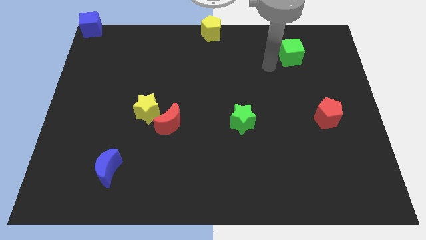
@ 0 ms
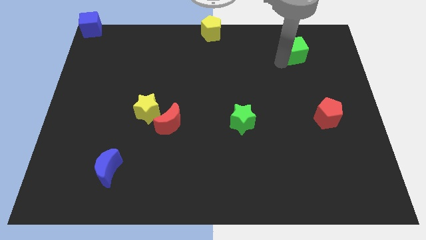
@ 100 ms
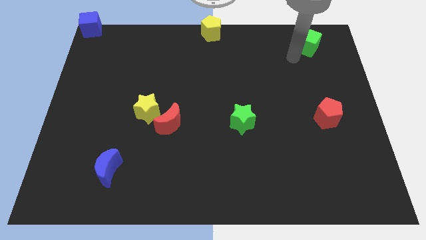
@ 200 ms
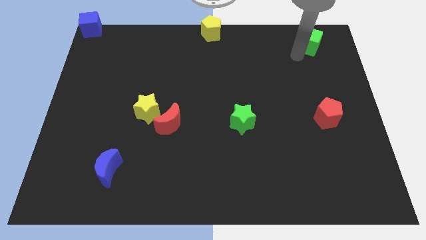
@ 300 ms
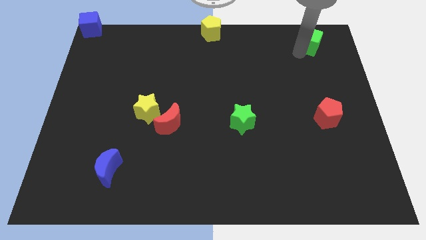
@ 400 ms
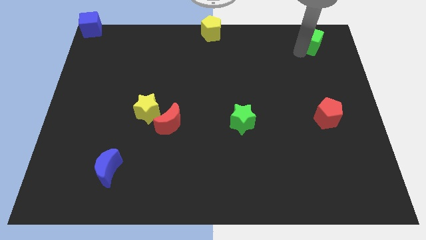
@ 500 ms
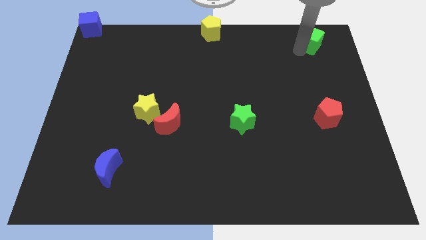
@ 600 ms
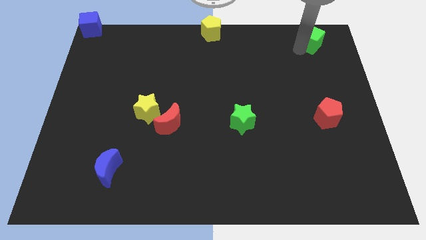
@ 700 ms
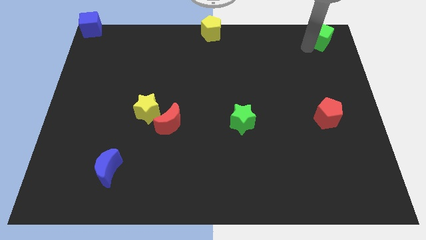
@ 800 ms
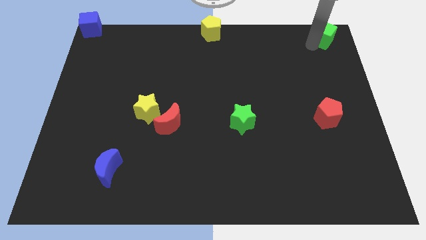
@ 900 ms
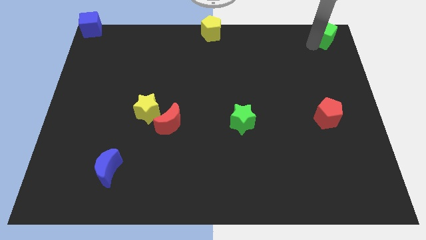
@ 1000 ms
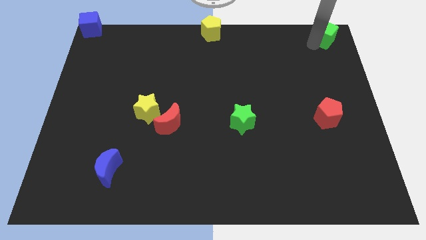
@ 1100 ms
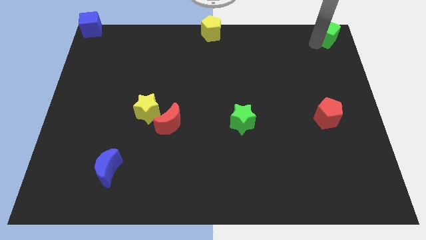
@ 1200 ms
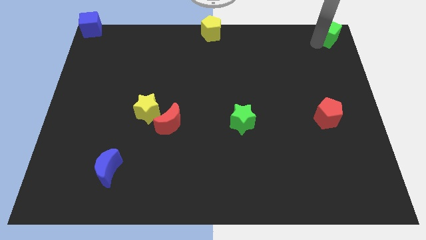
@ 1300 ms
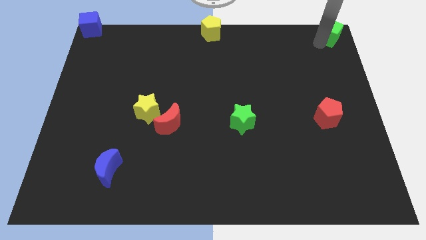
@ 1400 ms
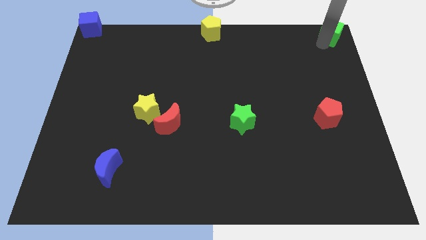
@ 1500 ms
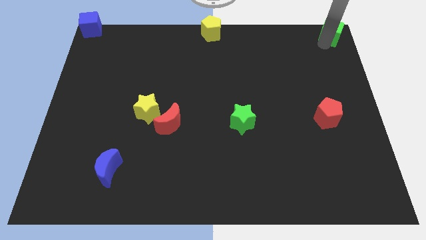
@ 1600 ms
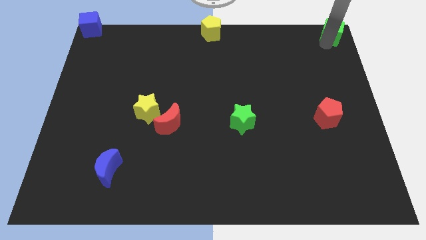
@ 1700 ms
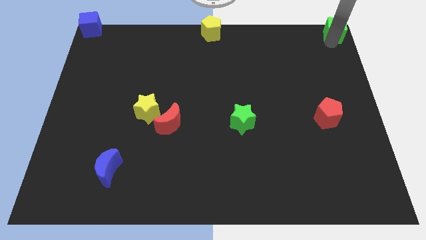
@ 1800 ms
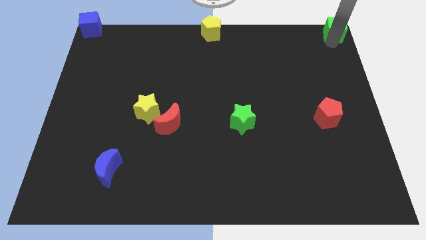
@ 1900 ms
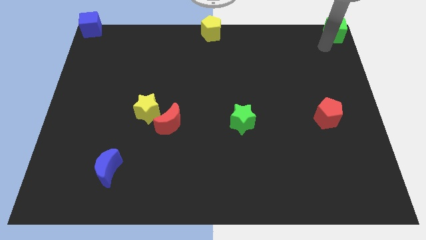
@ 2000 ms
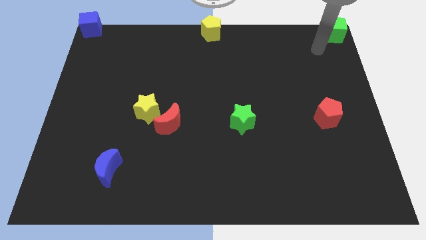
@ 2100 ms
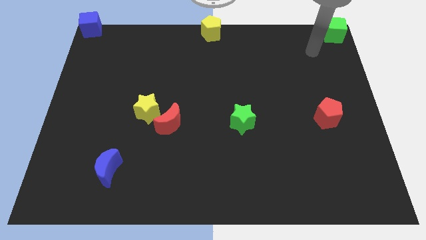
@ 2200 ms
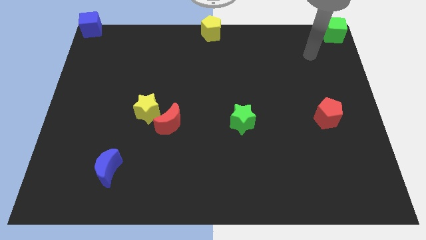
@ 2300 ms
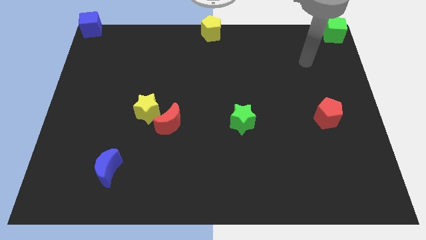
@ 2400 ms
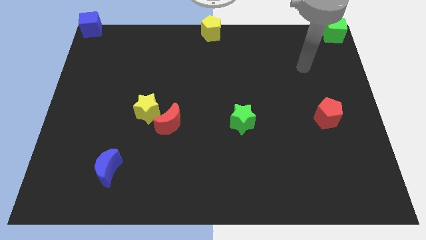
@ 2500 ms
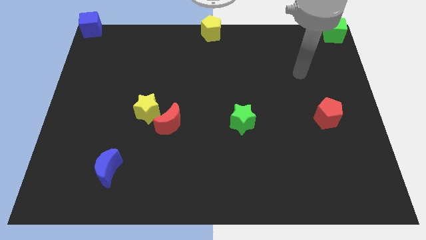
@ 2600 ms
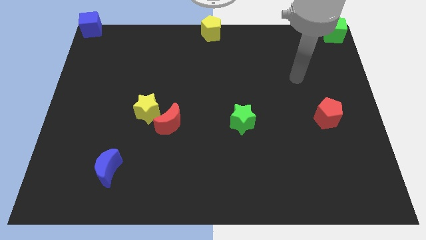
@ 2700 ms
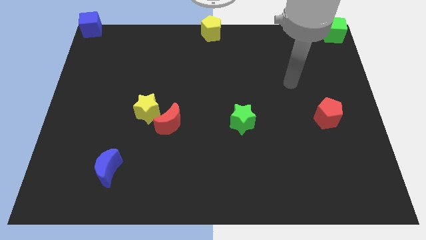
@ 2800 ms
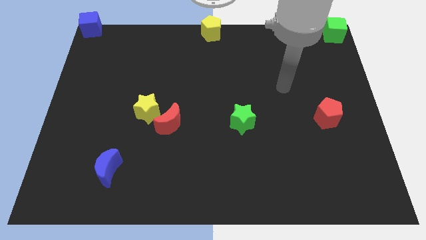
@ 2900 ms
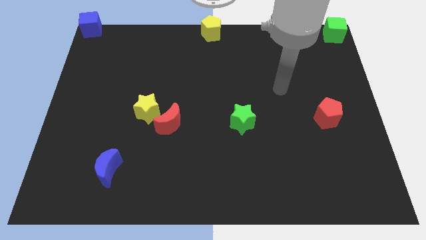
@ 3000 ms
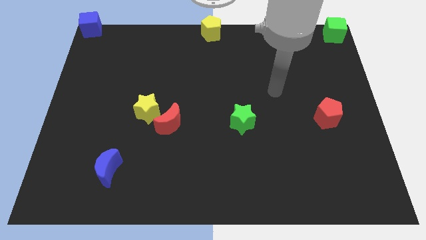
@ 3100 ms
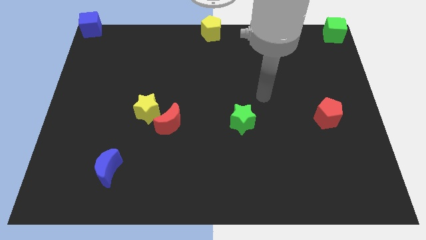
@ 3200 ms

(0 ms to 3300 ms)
put the green cube at the top right corner of the board

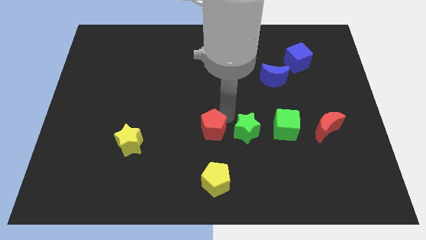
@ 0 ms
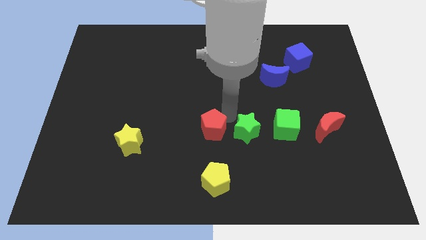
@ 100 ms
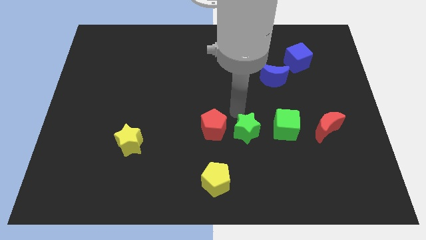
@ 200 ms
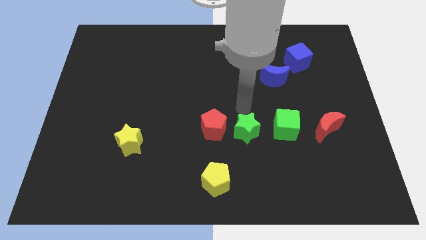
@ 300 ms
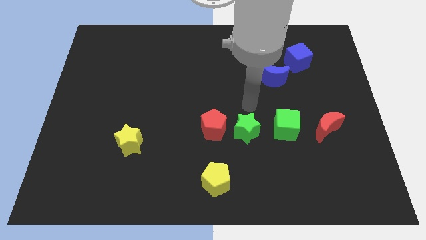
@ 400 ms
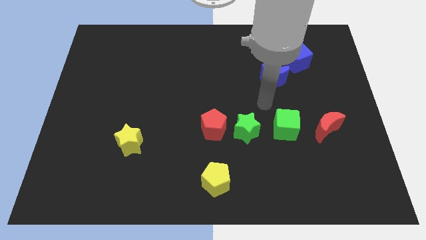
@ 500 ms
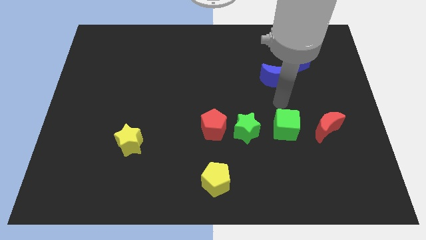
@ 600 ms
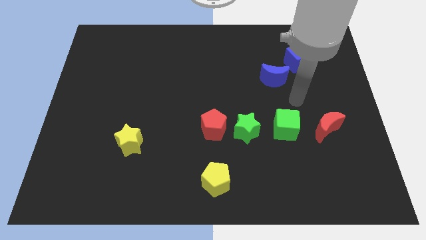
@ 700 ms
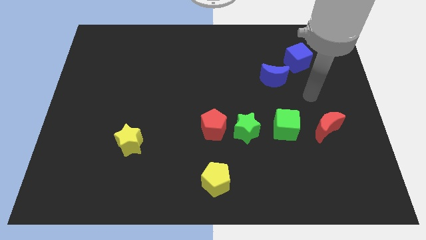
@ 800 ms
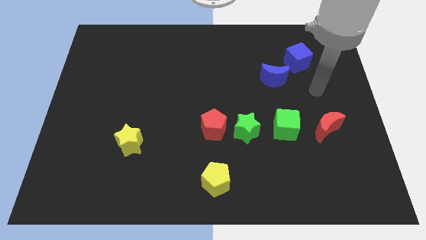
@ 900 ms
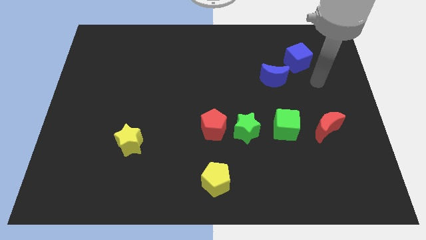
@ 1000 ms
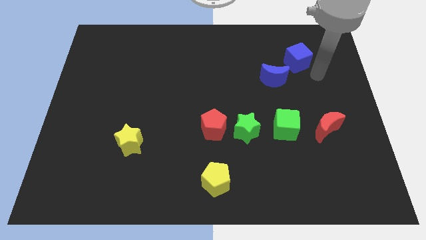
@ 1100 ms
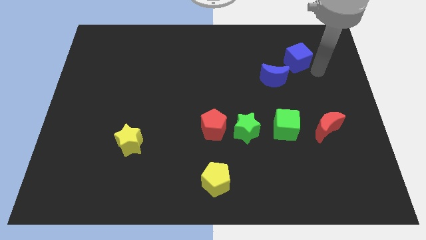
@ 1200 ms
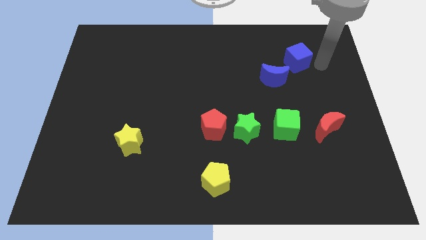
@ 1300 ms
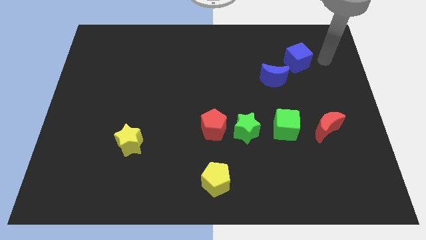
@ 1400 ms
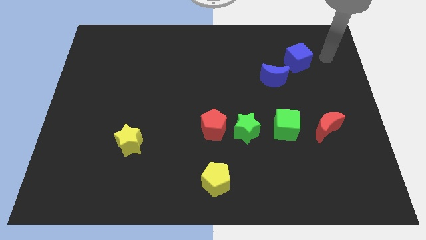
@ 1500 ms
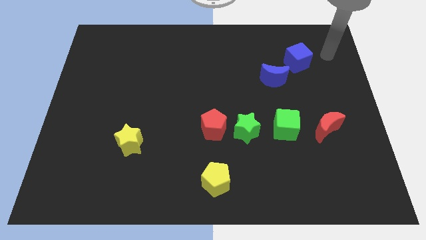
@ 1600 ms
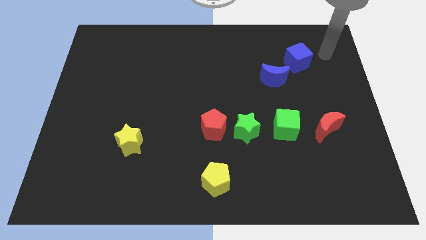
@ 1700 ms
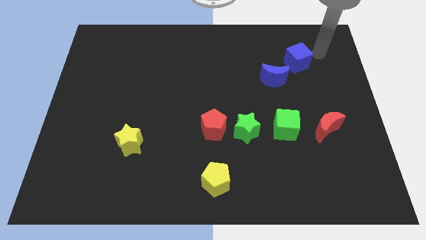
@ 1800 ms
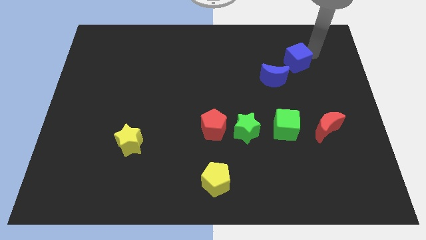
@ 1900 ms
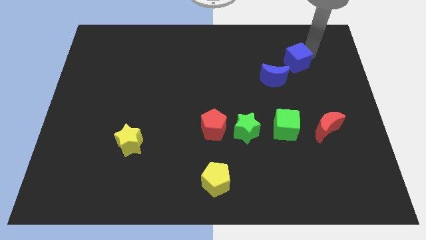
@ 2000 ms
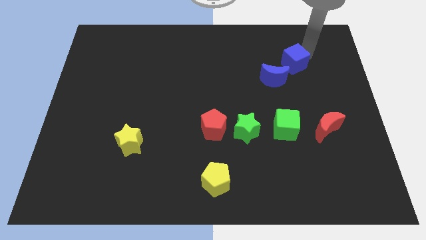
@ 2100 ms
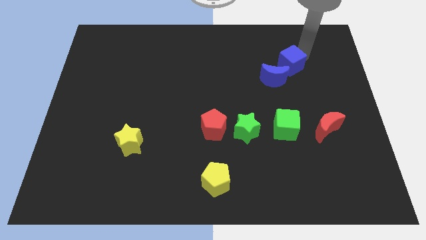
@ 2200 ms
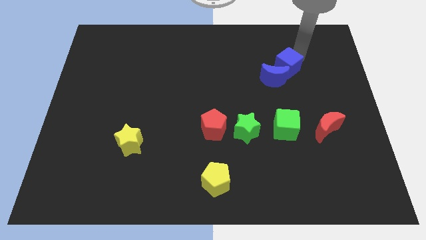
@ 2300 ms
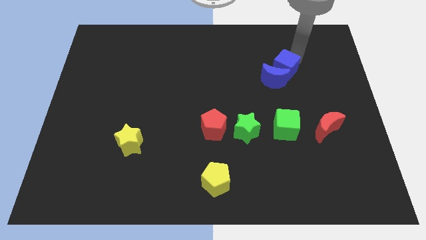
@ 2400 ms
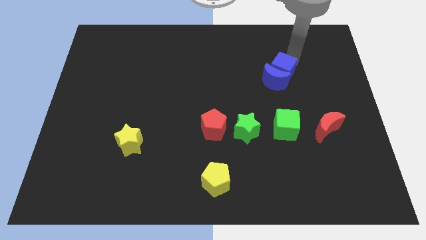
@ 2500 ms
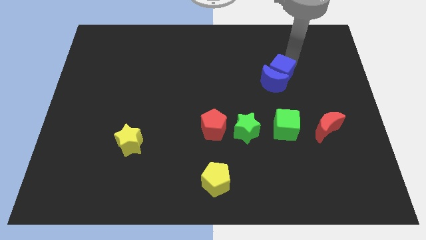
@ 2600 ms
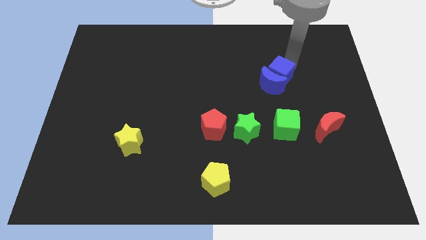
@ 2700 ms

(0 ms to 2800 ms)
move the blue cube into the blue crescent

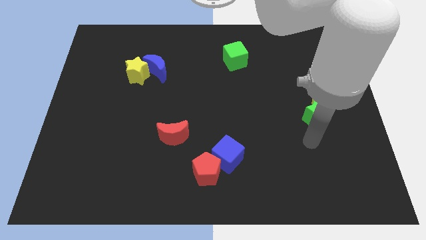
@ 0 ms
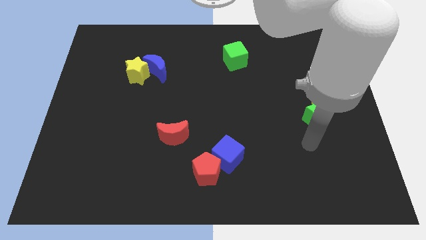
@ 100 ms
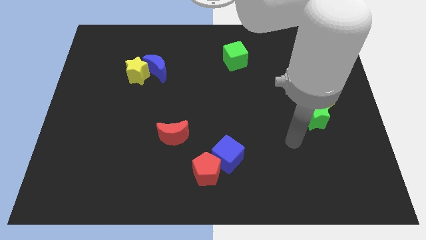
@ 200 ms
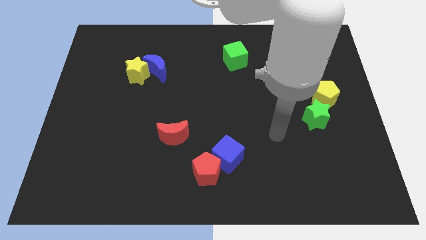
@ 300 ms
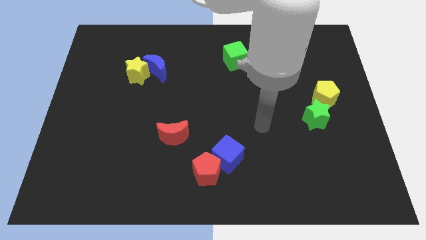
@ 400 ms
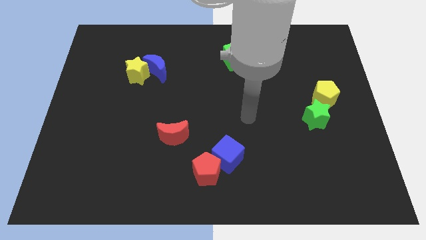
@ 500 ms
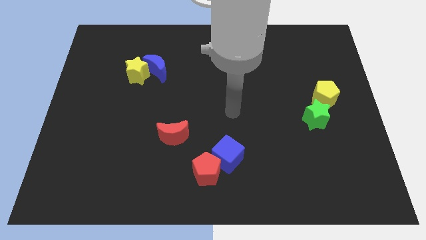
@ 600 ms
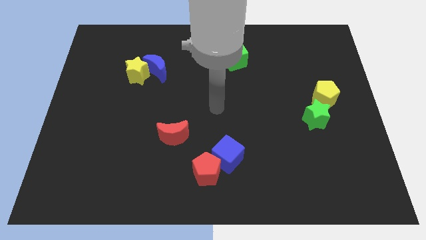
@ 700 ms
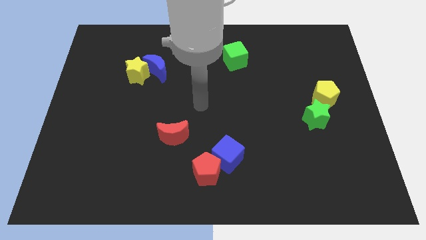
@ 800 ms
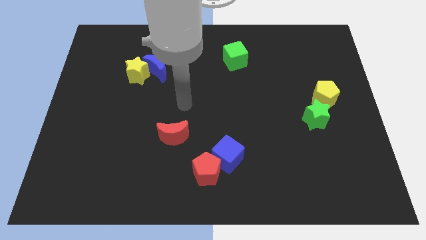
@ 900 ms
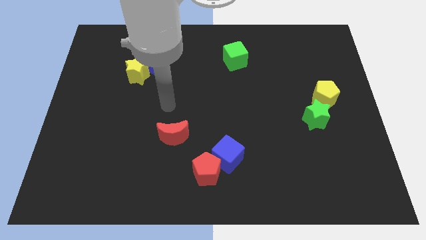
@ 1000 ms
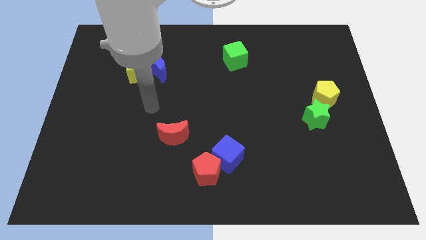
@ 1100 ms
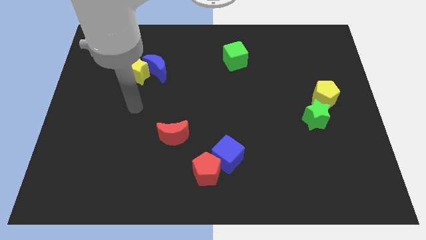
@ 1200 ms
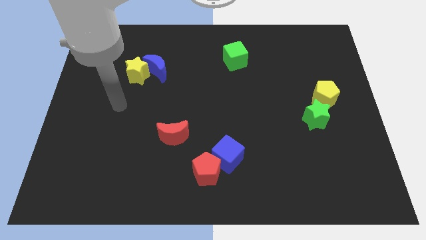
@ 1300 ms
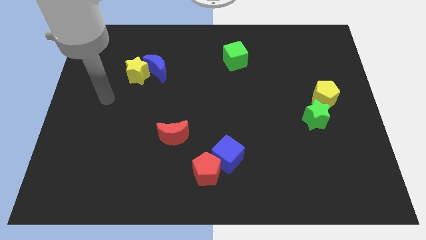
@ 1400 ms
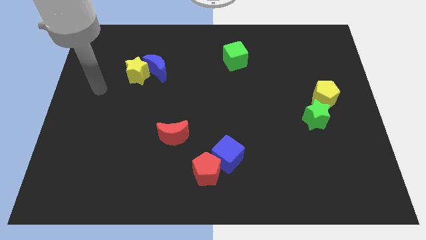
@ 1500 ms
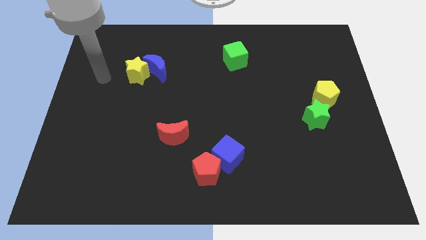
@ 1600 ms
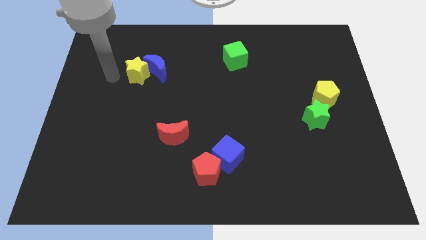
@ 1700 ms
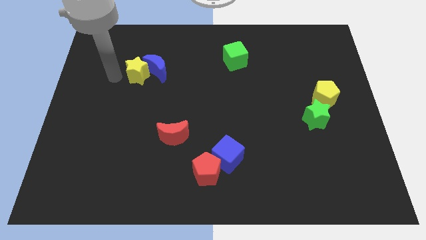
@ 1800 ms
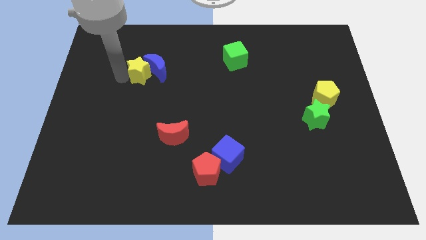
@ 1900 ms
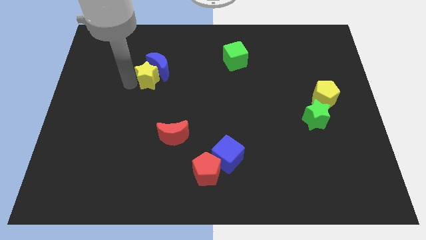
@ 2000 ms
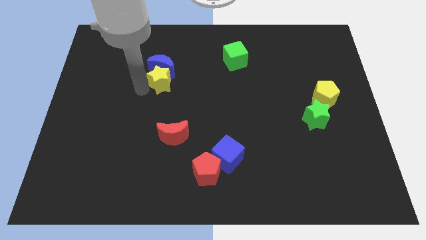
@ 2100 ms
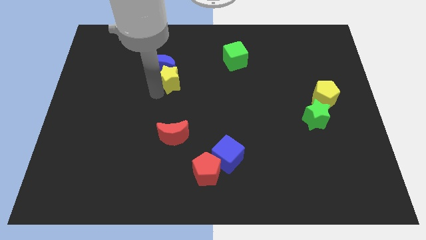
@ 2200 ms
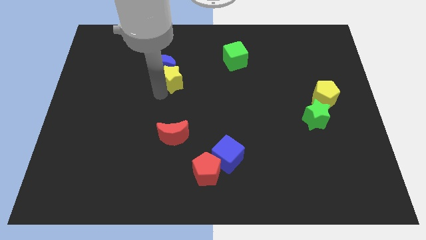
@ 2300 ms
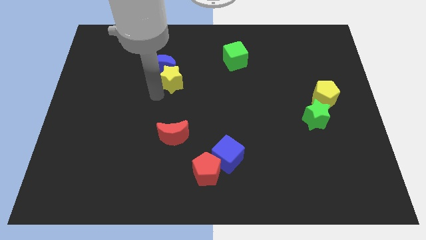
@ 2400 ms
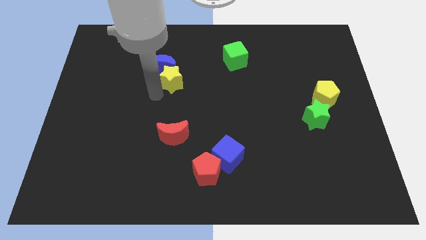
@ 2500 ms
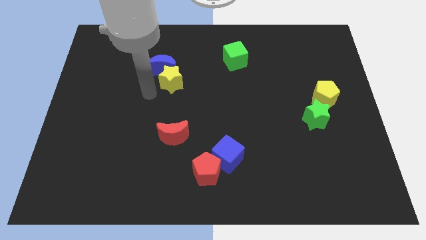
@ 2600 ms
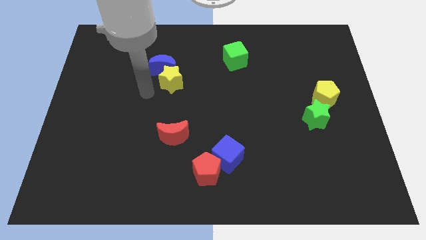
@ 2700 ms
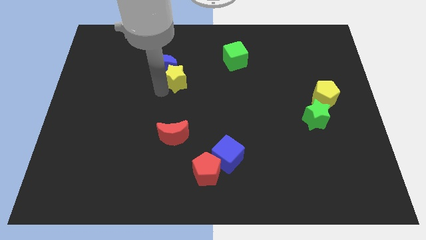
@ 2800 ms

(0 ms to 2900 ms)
slightly push the yellow star to the bottom of the blue crescent
